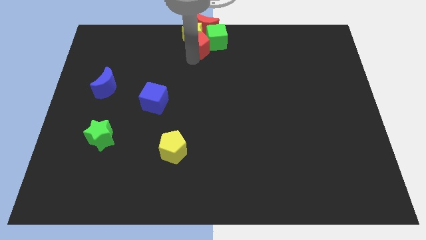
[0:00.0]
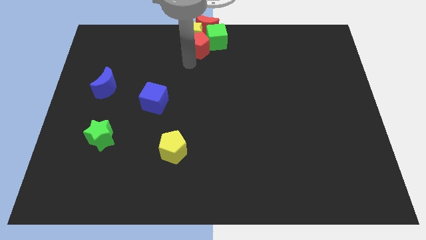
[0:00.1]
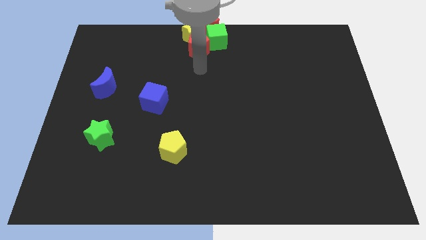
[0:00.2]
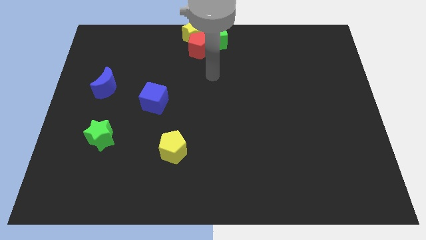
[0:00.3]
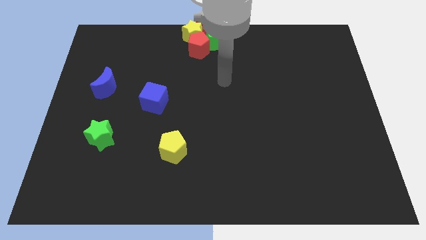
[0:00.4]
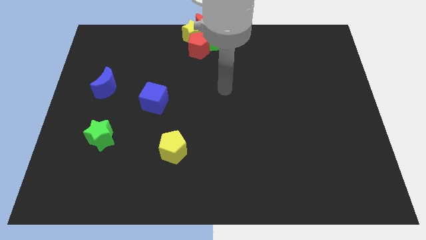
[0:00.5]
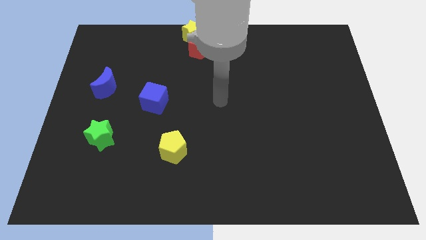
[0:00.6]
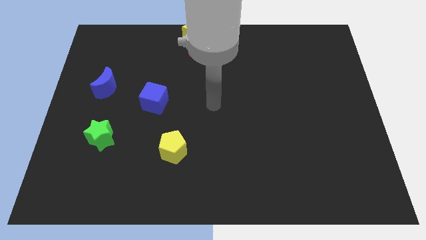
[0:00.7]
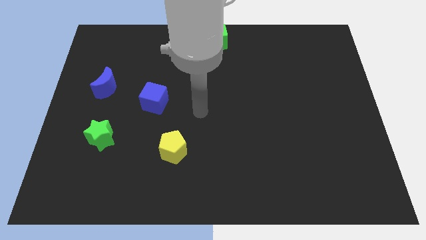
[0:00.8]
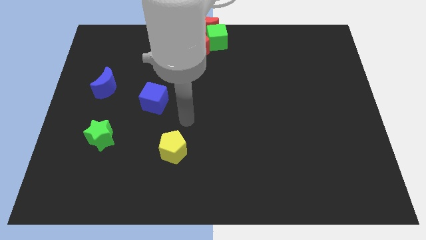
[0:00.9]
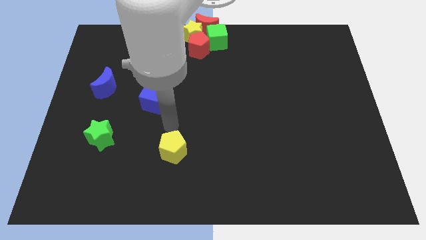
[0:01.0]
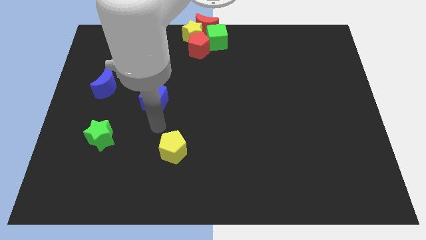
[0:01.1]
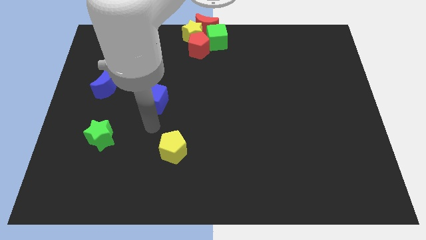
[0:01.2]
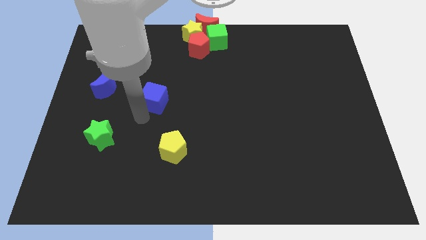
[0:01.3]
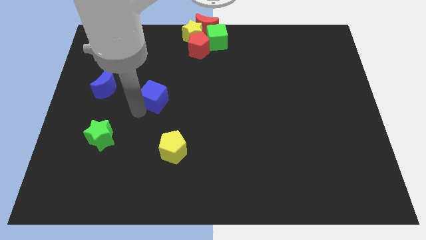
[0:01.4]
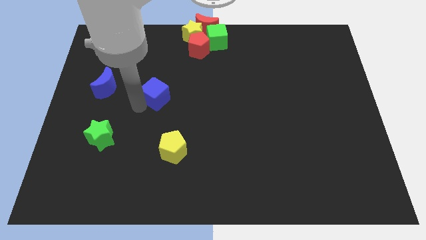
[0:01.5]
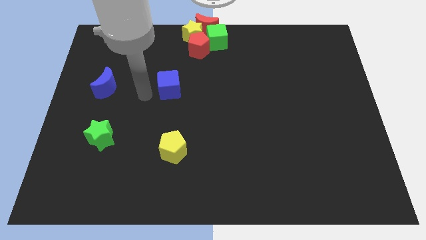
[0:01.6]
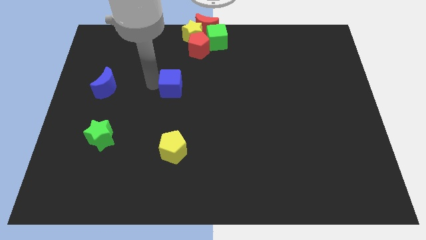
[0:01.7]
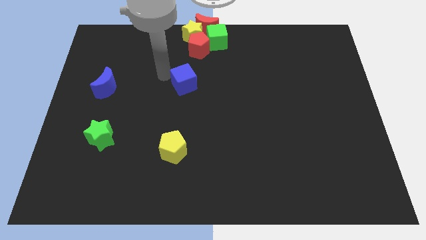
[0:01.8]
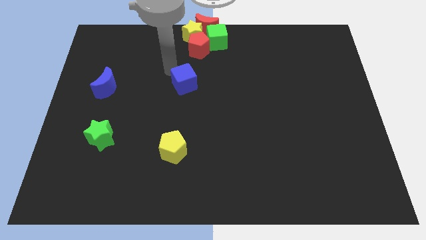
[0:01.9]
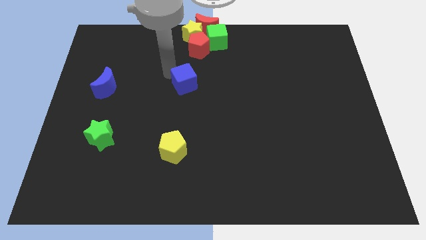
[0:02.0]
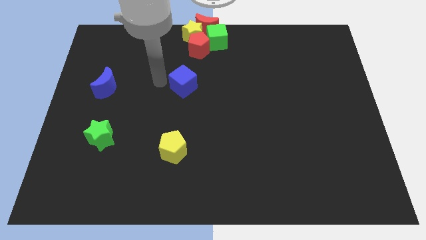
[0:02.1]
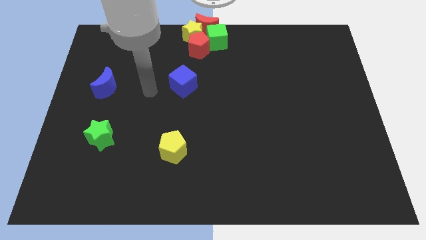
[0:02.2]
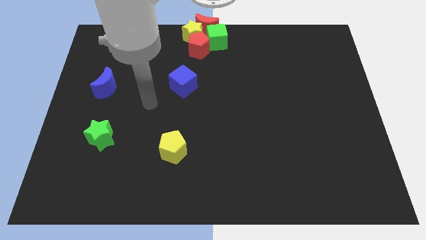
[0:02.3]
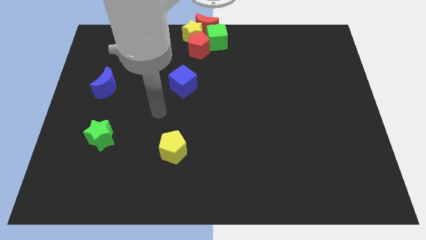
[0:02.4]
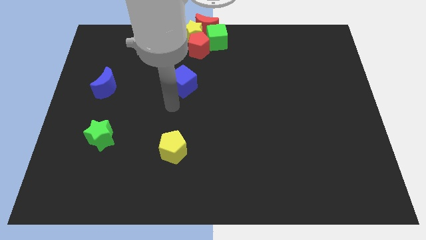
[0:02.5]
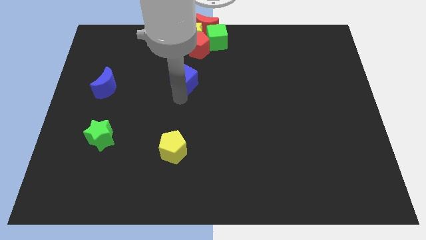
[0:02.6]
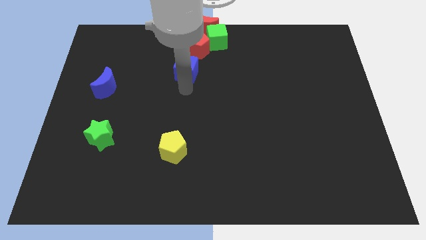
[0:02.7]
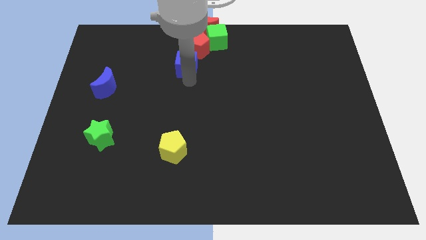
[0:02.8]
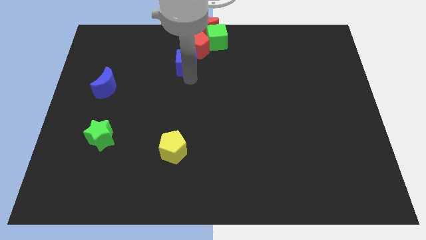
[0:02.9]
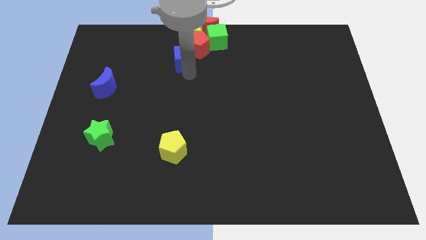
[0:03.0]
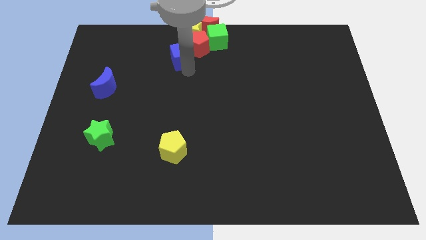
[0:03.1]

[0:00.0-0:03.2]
slide the blue cube to the left side of the red pentagon

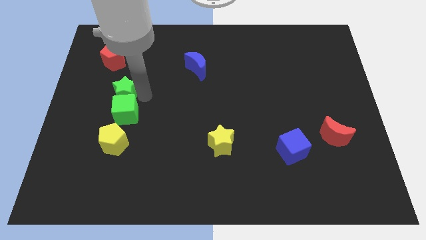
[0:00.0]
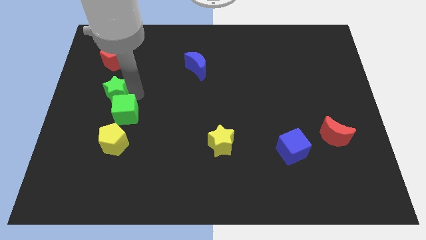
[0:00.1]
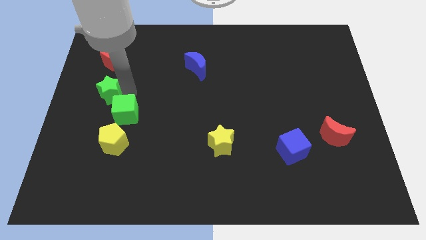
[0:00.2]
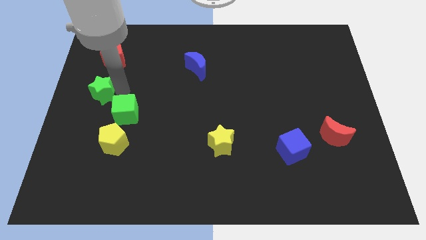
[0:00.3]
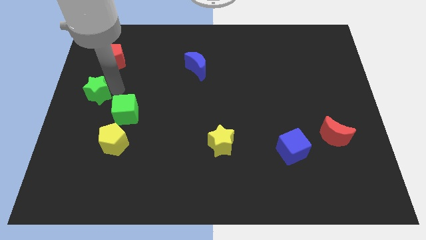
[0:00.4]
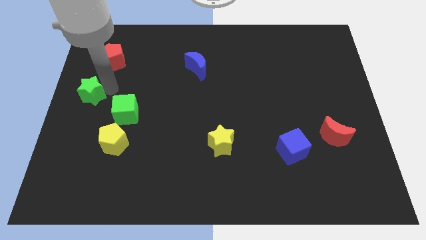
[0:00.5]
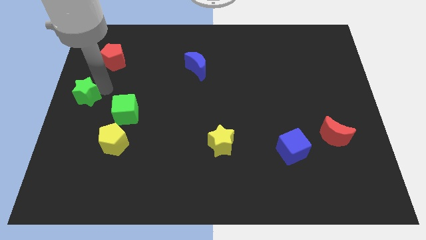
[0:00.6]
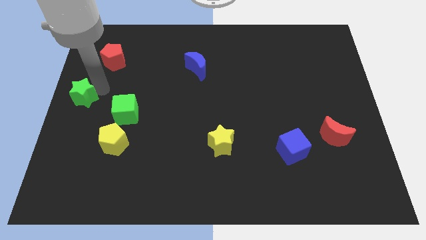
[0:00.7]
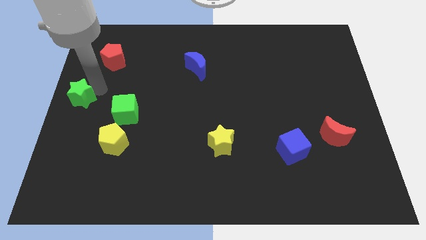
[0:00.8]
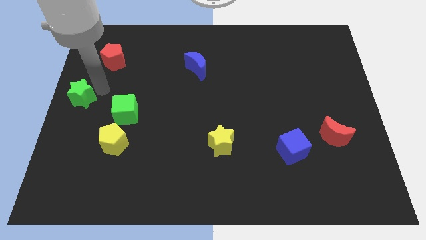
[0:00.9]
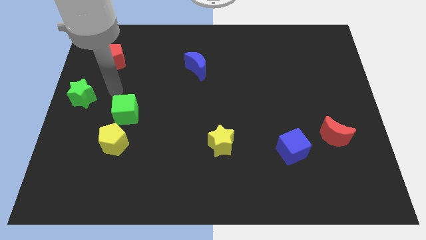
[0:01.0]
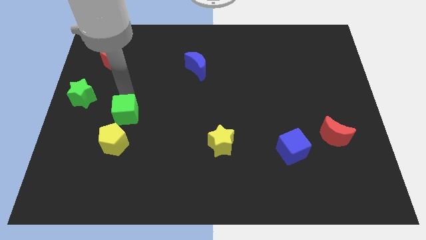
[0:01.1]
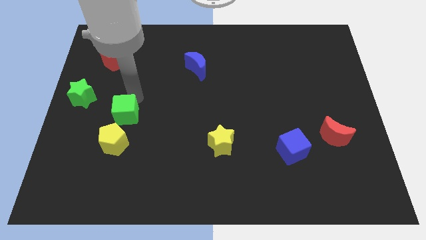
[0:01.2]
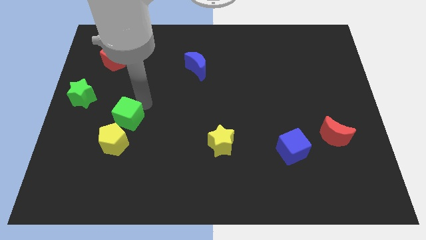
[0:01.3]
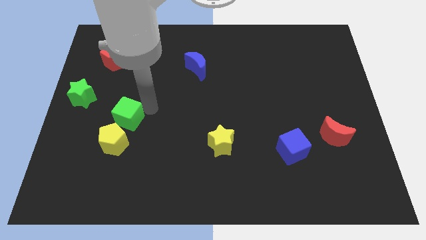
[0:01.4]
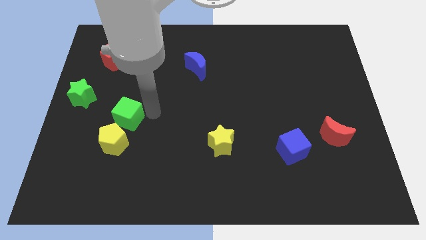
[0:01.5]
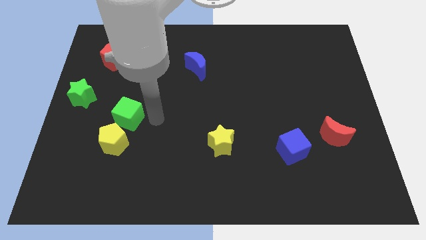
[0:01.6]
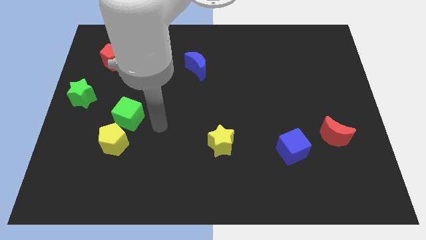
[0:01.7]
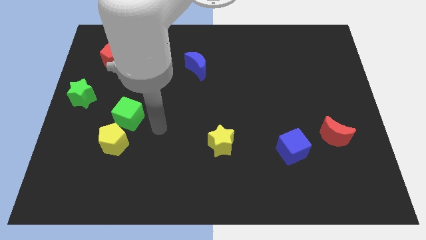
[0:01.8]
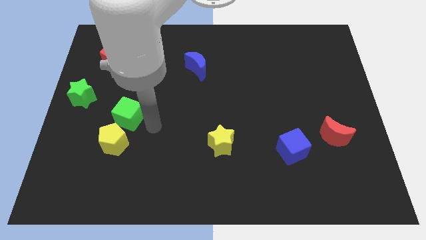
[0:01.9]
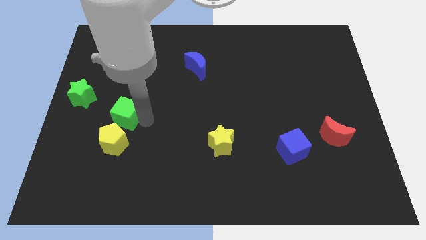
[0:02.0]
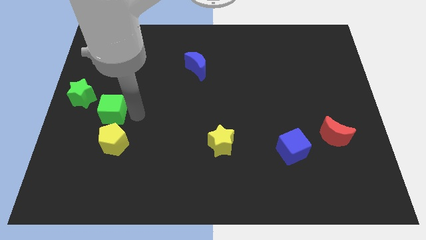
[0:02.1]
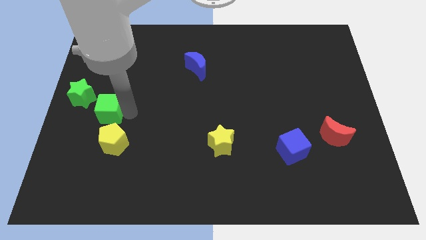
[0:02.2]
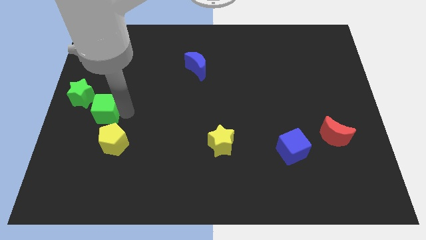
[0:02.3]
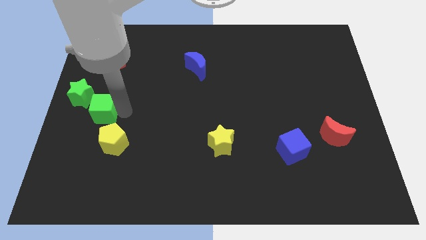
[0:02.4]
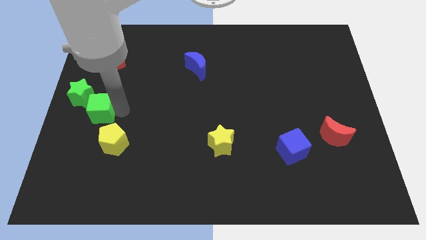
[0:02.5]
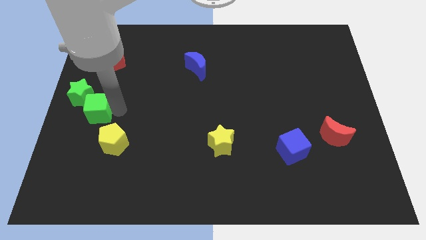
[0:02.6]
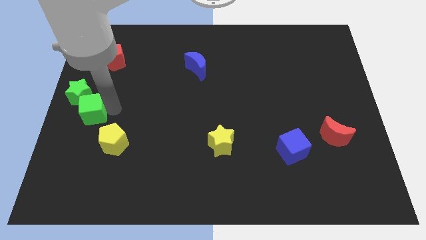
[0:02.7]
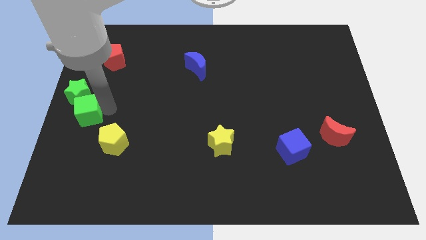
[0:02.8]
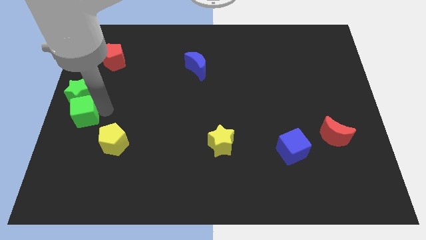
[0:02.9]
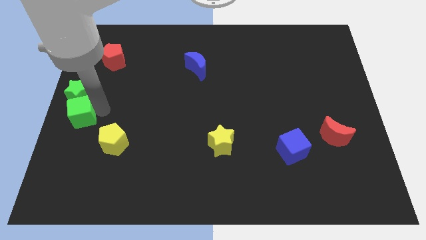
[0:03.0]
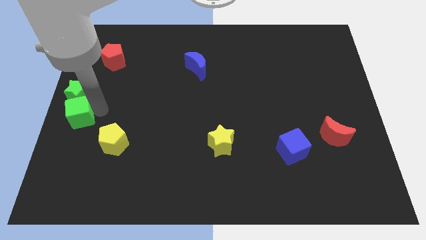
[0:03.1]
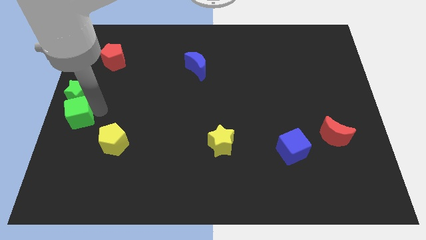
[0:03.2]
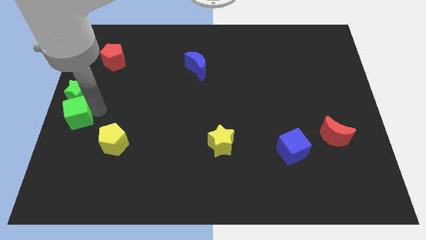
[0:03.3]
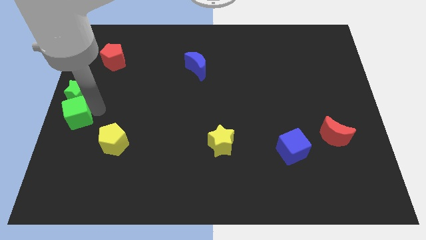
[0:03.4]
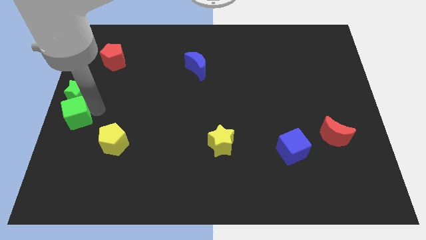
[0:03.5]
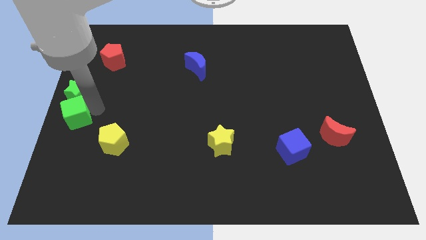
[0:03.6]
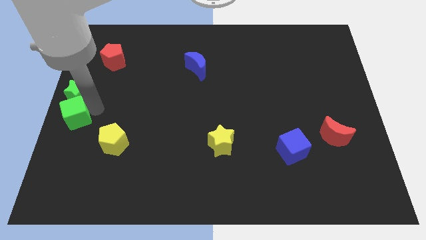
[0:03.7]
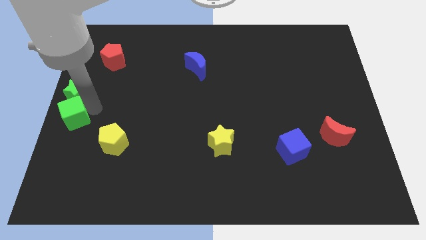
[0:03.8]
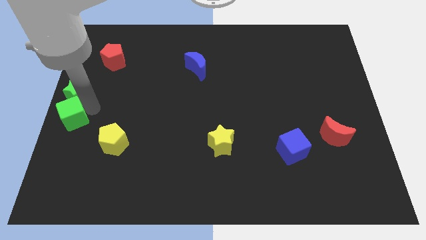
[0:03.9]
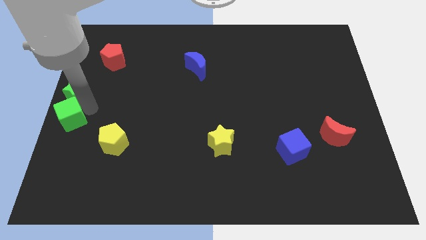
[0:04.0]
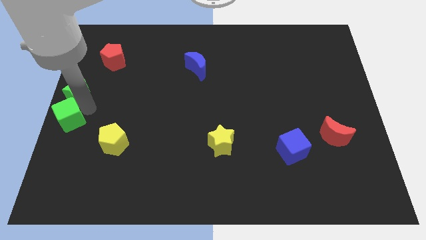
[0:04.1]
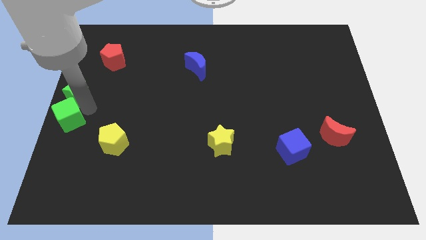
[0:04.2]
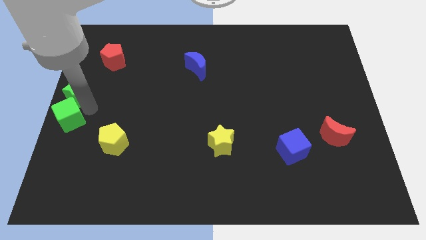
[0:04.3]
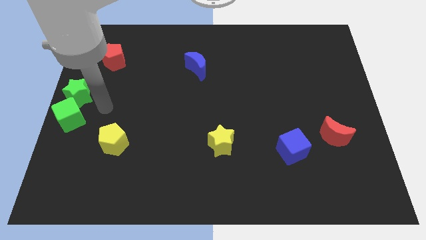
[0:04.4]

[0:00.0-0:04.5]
move green blocks to the left centre of the board

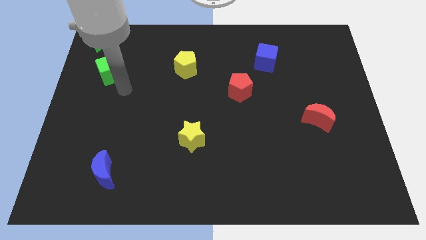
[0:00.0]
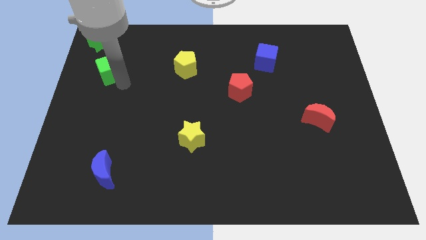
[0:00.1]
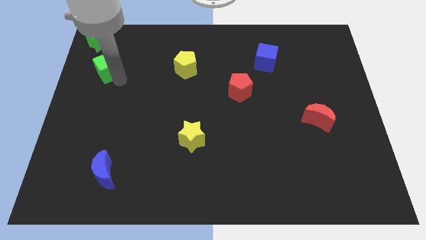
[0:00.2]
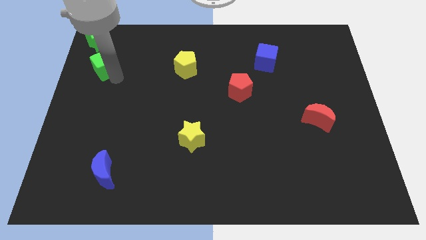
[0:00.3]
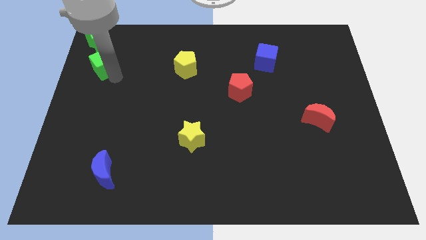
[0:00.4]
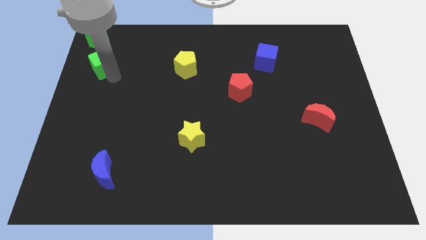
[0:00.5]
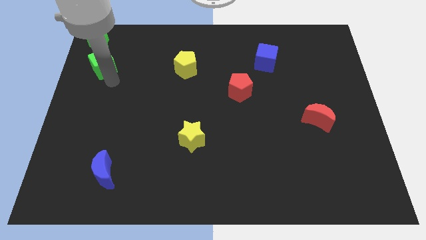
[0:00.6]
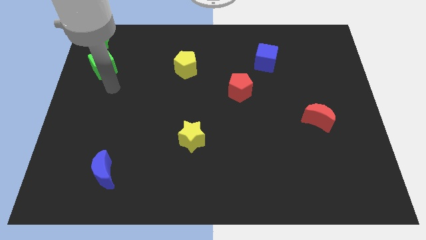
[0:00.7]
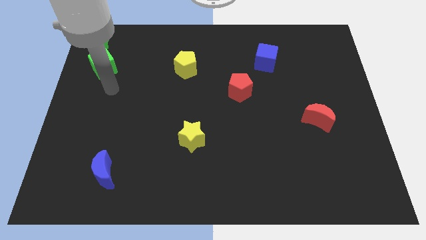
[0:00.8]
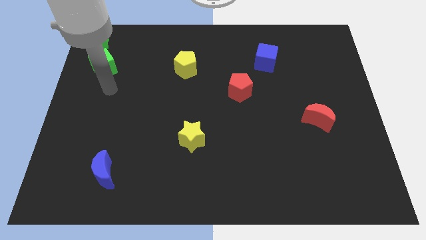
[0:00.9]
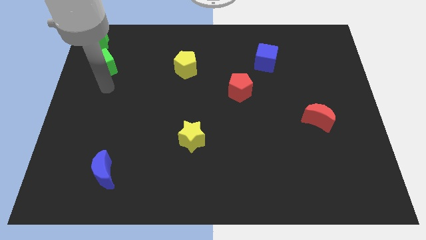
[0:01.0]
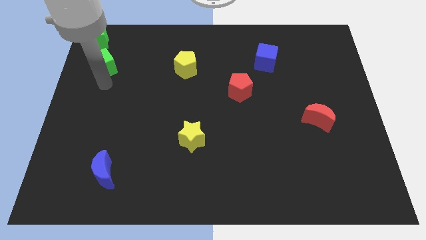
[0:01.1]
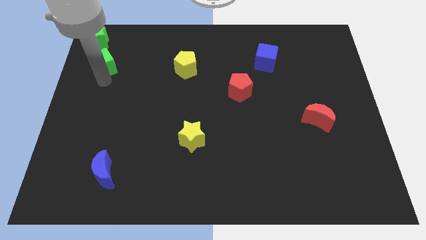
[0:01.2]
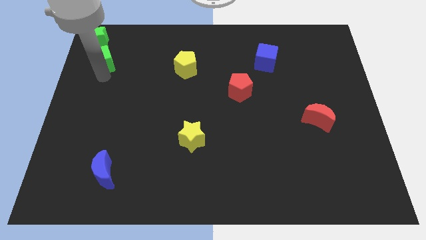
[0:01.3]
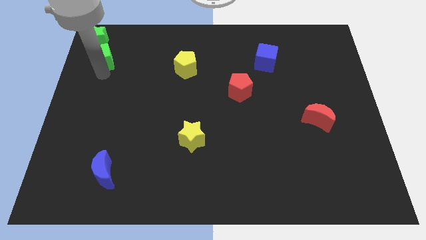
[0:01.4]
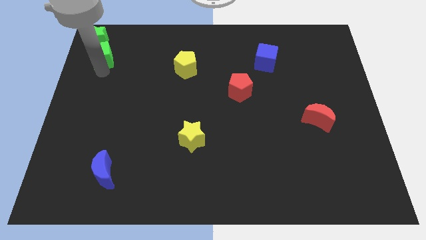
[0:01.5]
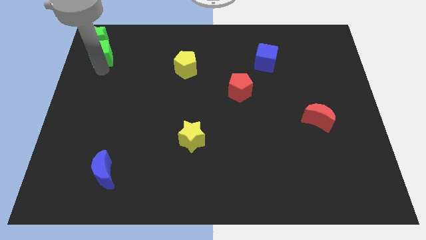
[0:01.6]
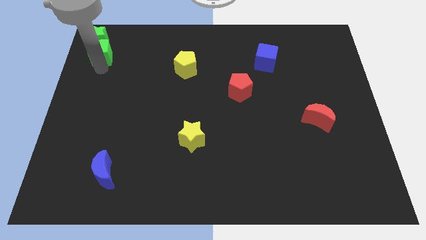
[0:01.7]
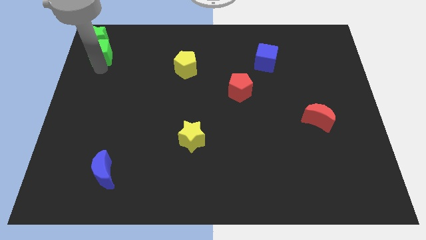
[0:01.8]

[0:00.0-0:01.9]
move the green cube bottom to the green star
